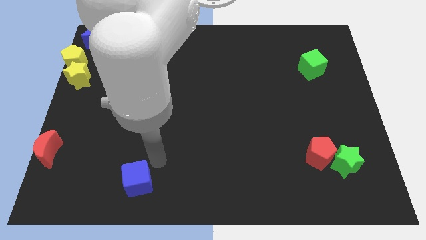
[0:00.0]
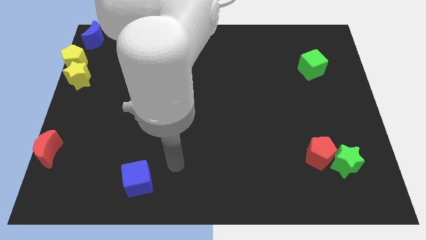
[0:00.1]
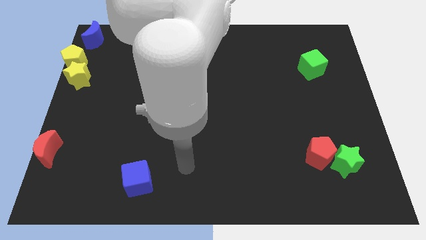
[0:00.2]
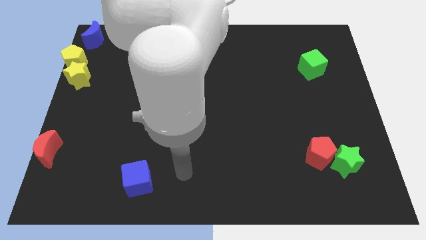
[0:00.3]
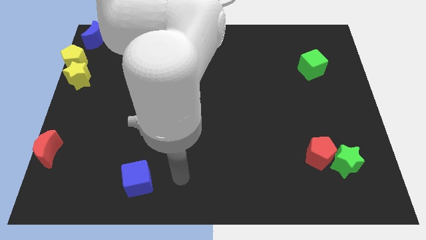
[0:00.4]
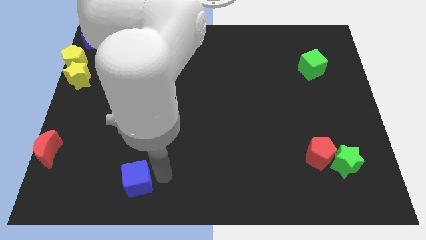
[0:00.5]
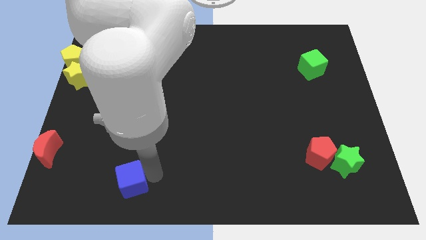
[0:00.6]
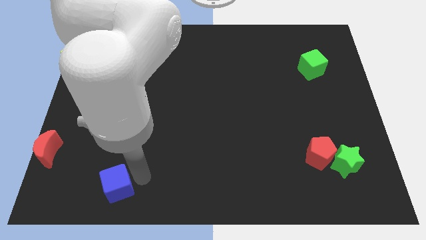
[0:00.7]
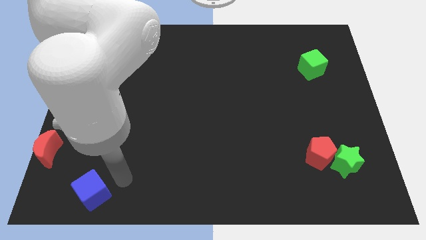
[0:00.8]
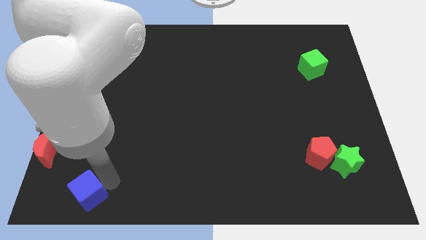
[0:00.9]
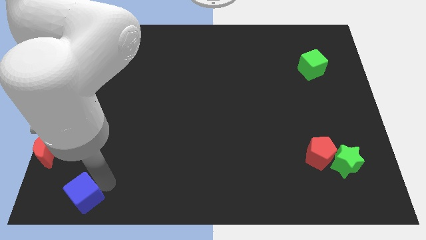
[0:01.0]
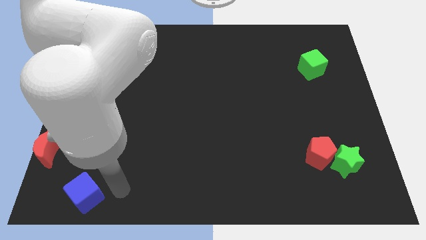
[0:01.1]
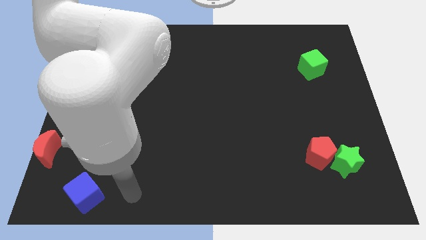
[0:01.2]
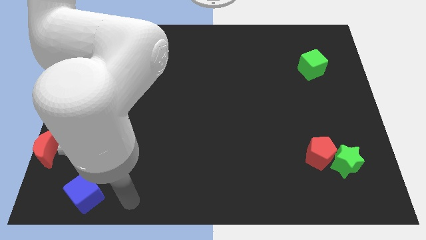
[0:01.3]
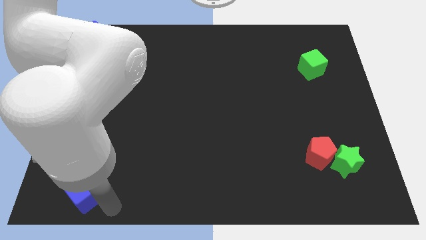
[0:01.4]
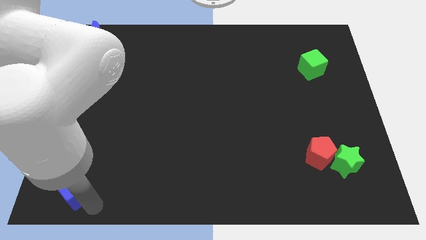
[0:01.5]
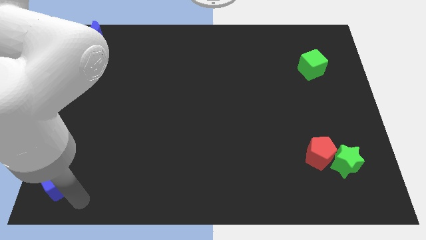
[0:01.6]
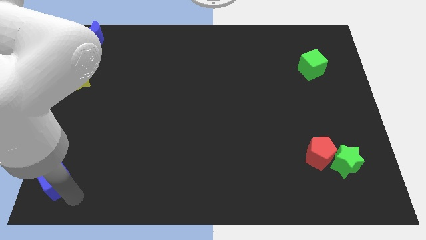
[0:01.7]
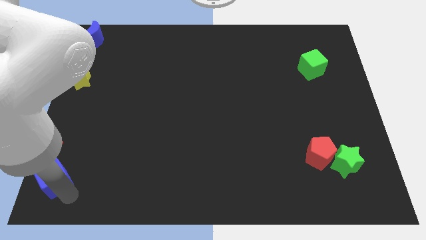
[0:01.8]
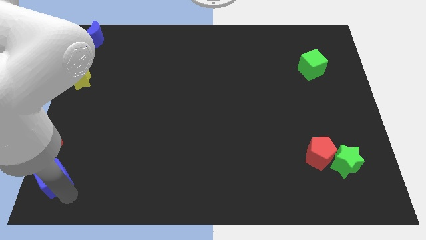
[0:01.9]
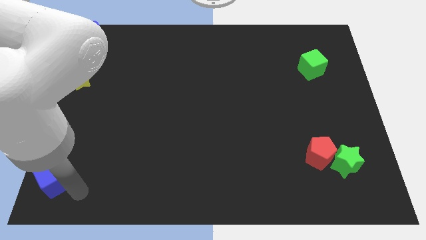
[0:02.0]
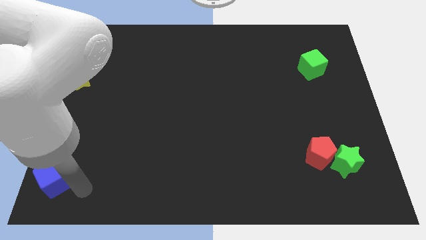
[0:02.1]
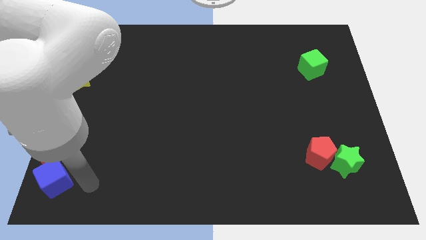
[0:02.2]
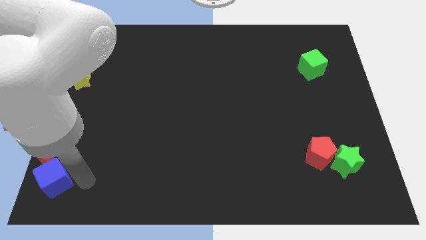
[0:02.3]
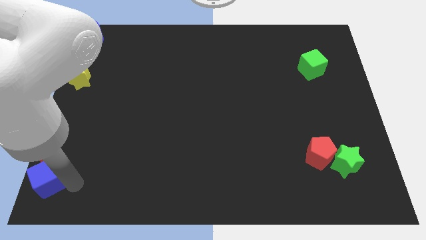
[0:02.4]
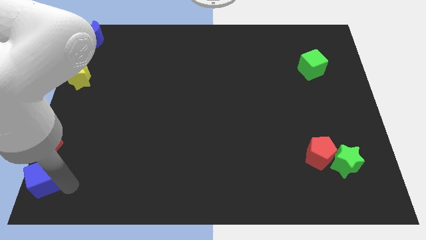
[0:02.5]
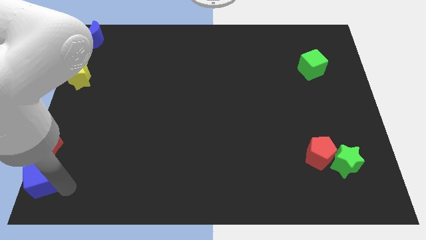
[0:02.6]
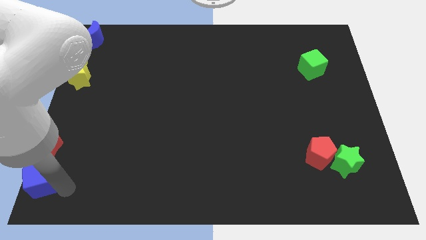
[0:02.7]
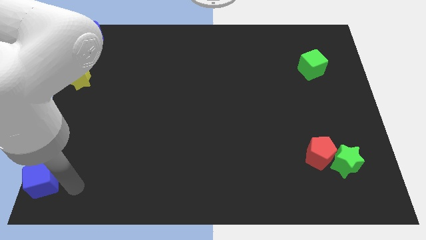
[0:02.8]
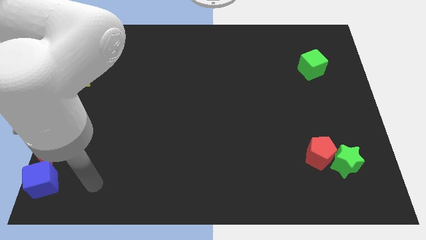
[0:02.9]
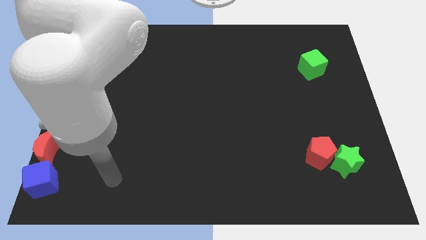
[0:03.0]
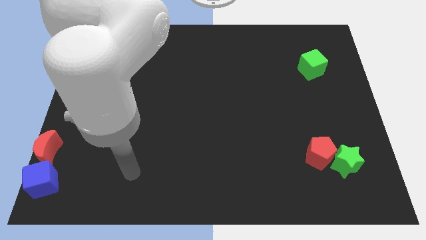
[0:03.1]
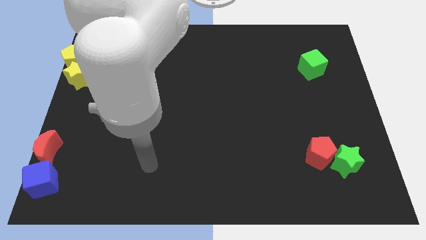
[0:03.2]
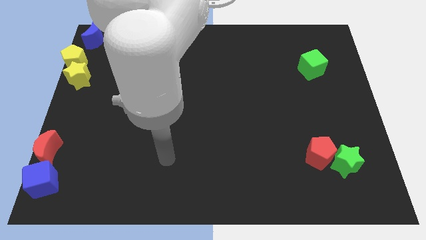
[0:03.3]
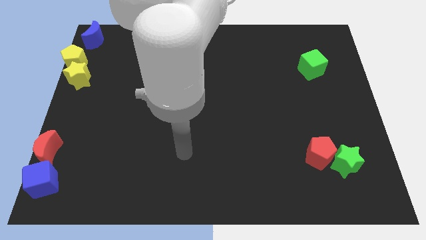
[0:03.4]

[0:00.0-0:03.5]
place blue moon below red moon

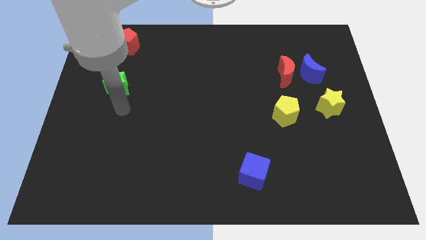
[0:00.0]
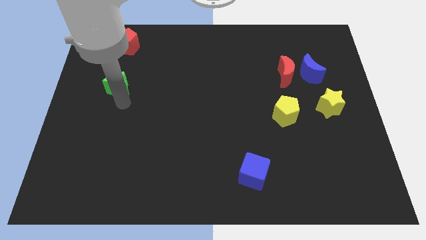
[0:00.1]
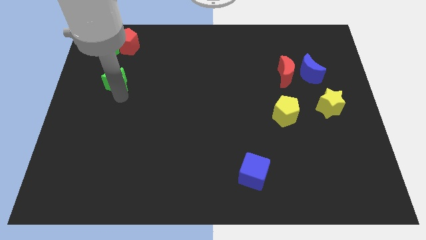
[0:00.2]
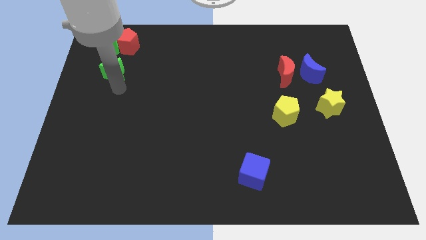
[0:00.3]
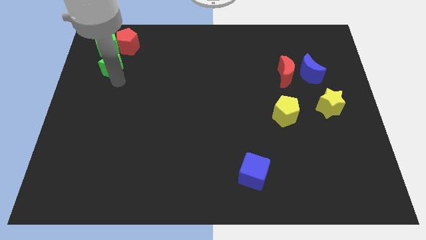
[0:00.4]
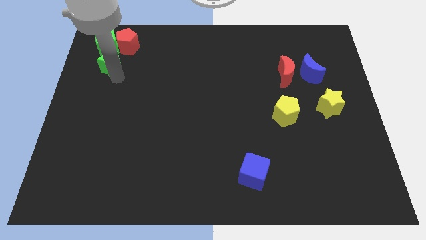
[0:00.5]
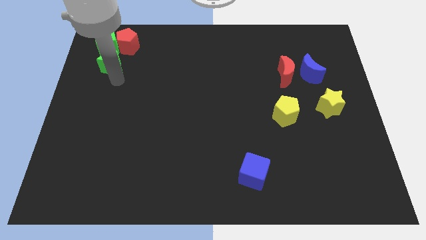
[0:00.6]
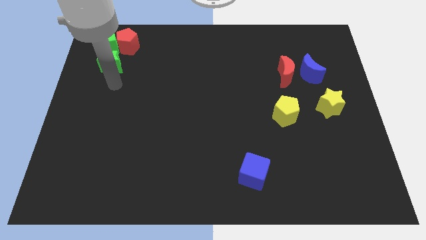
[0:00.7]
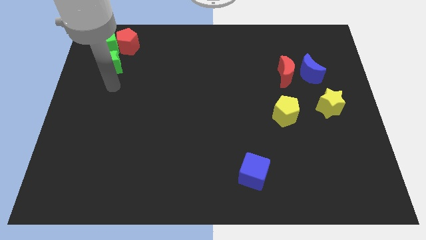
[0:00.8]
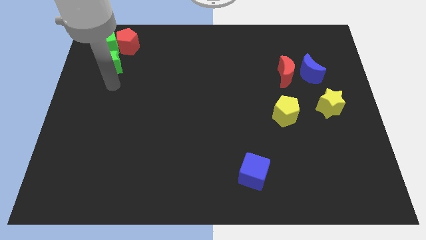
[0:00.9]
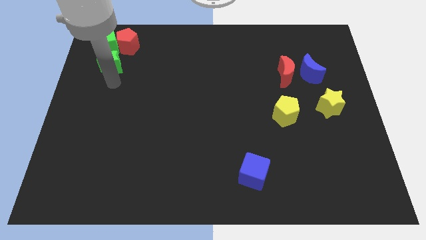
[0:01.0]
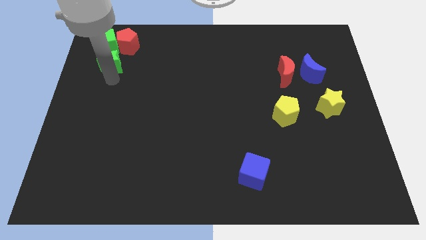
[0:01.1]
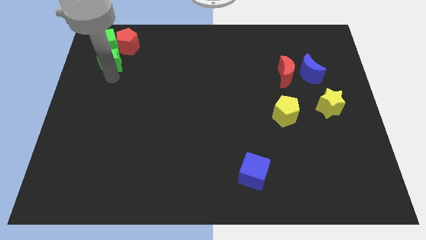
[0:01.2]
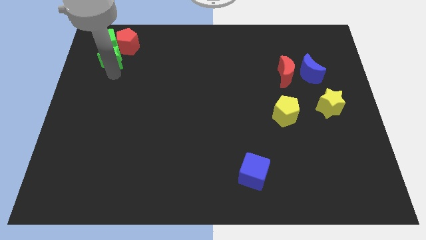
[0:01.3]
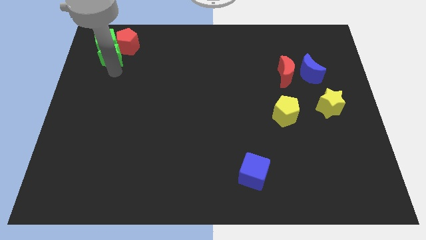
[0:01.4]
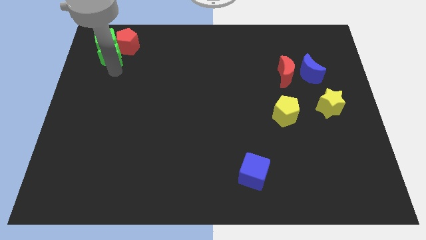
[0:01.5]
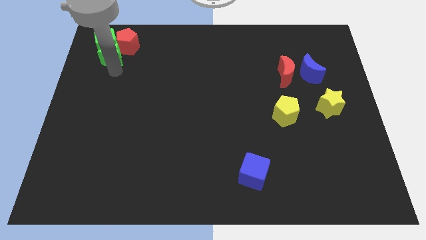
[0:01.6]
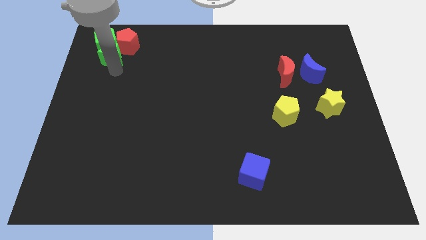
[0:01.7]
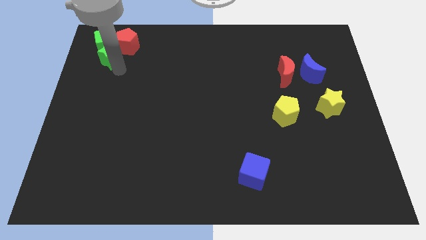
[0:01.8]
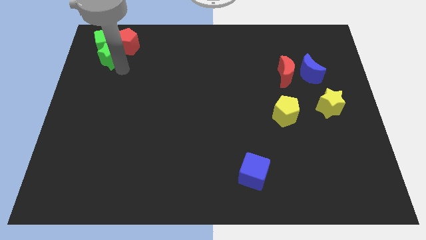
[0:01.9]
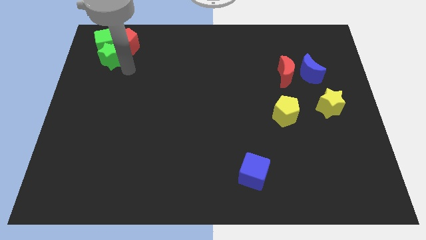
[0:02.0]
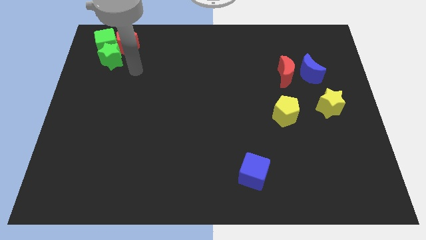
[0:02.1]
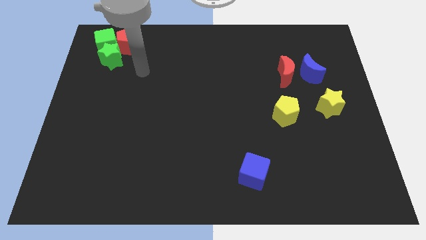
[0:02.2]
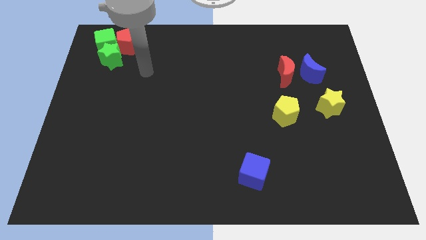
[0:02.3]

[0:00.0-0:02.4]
push the green star into the blue cube

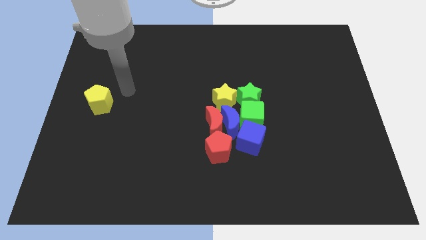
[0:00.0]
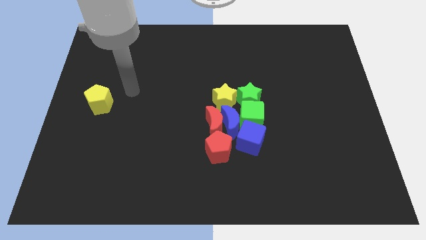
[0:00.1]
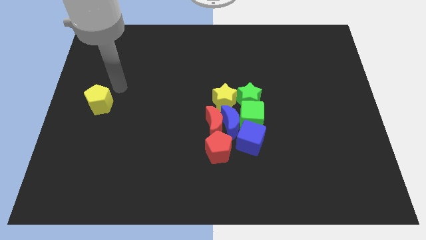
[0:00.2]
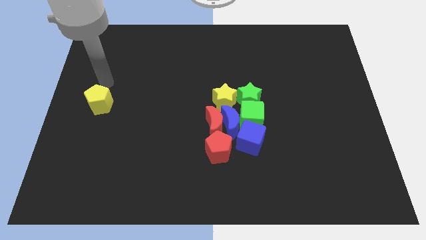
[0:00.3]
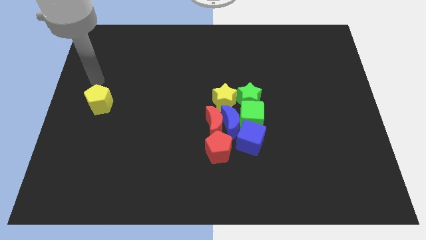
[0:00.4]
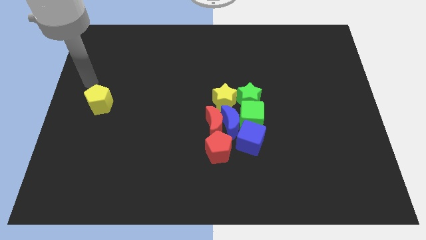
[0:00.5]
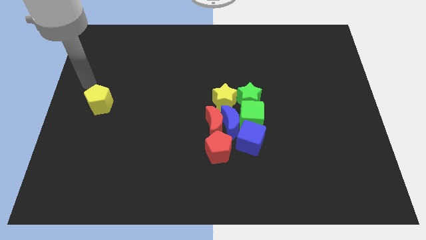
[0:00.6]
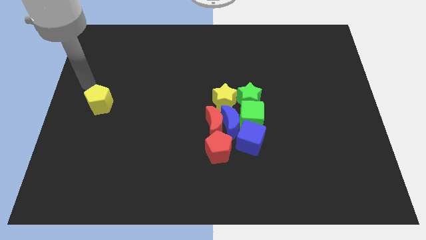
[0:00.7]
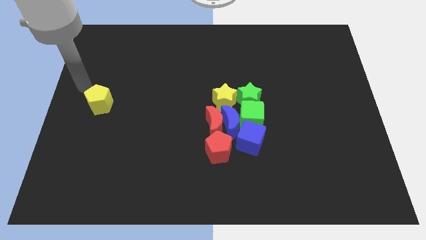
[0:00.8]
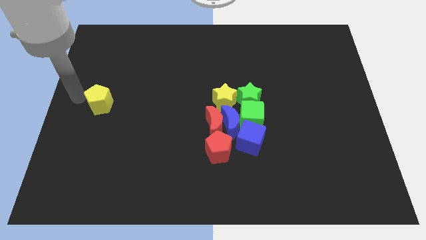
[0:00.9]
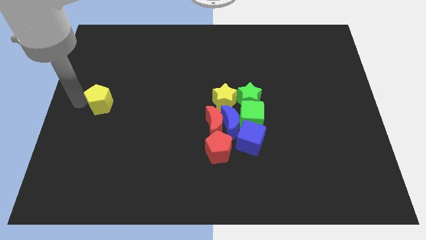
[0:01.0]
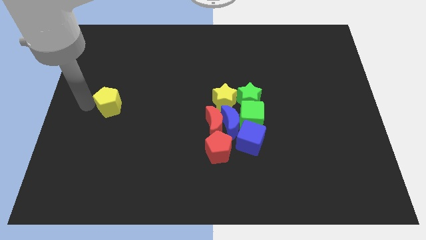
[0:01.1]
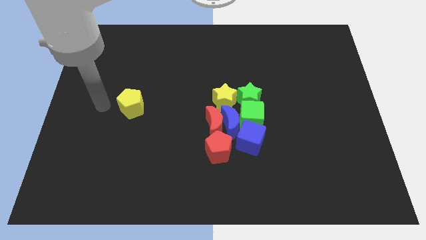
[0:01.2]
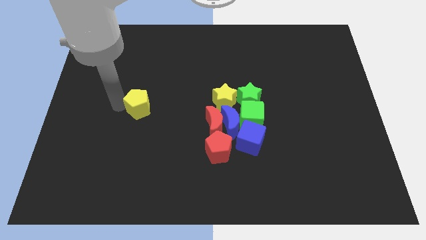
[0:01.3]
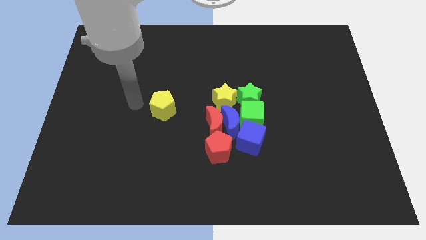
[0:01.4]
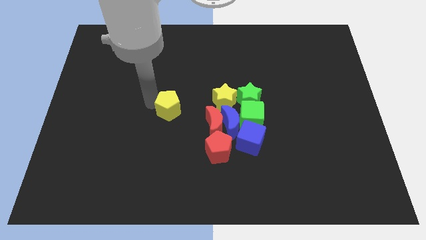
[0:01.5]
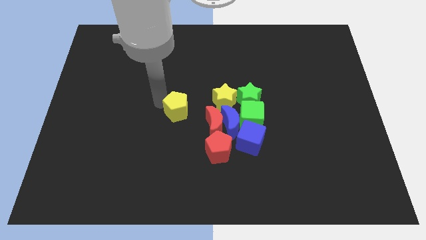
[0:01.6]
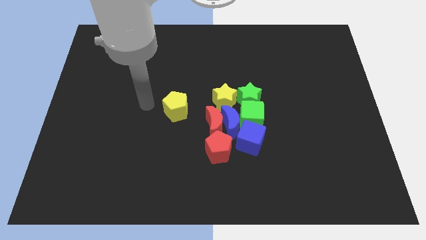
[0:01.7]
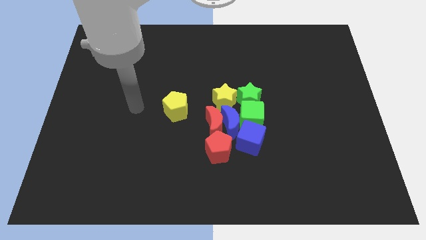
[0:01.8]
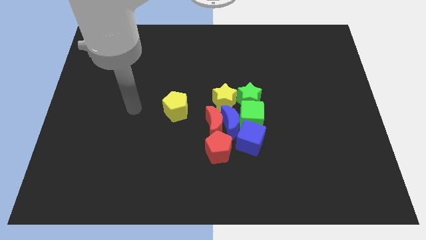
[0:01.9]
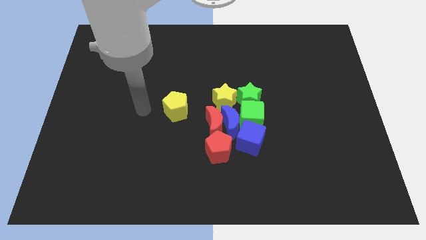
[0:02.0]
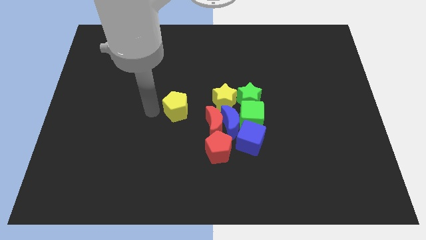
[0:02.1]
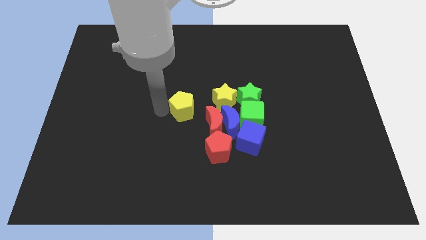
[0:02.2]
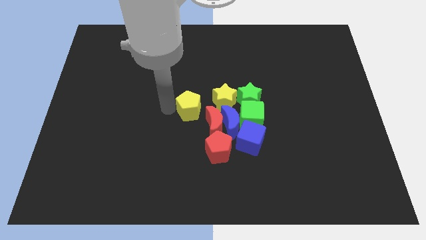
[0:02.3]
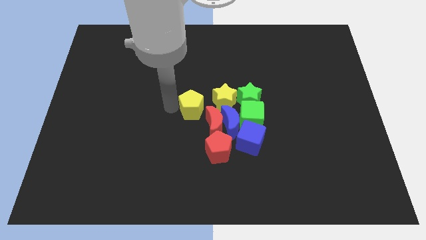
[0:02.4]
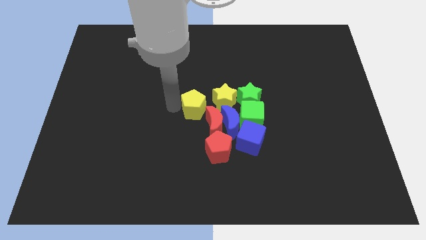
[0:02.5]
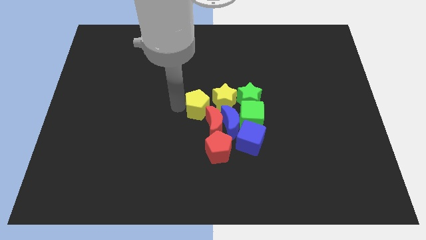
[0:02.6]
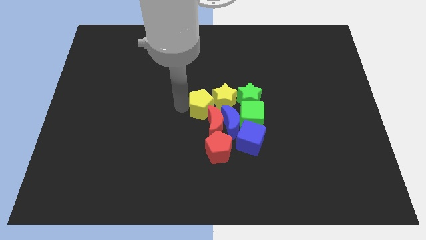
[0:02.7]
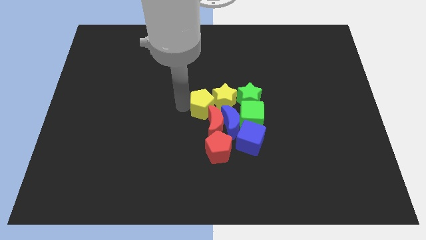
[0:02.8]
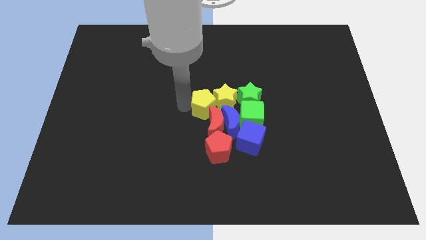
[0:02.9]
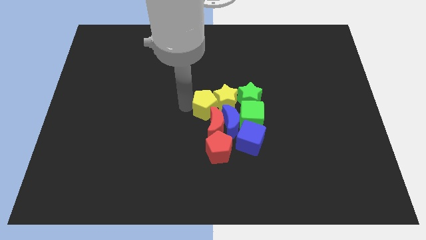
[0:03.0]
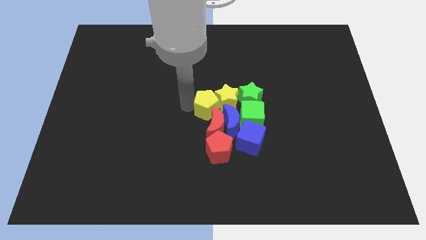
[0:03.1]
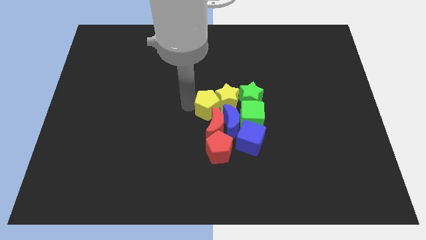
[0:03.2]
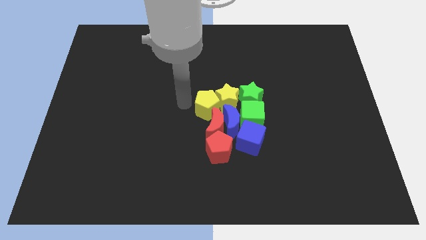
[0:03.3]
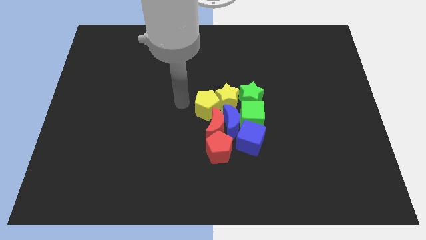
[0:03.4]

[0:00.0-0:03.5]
move the yellow pentagon into yellow star
